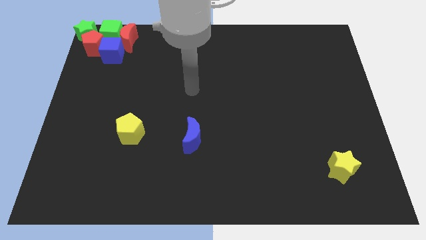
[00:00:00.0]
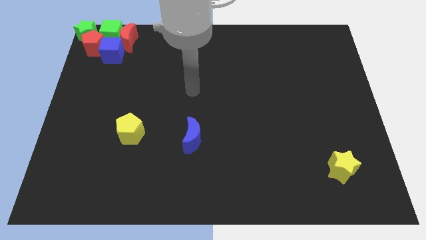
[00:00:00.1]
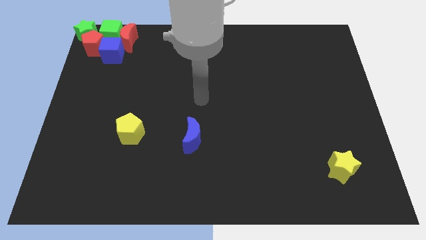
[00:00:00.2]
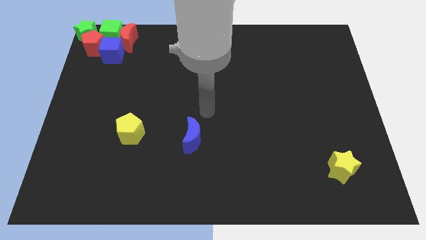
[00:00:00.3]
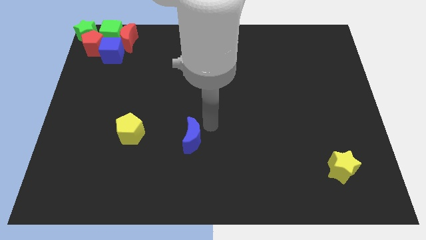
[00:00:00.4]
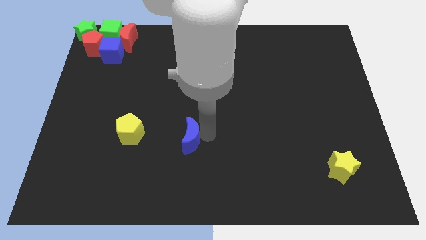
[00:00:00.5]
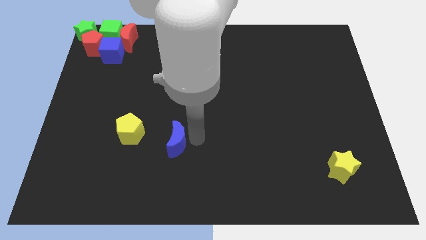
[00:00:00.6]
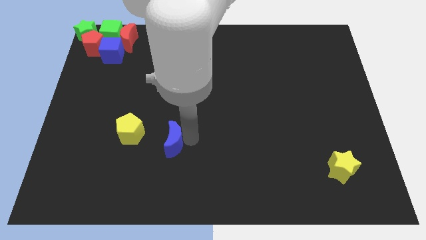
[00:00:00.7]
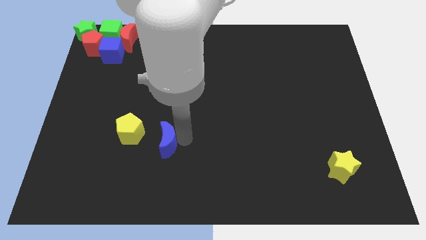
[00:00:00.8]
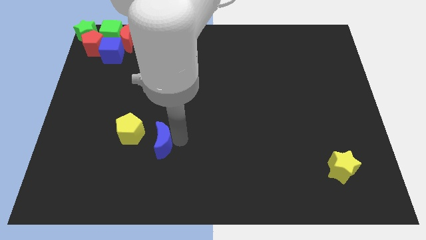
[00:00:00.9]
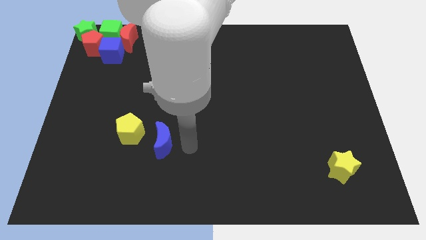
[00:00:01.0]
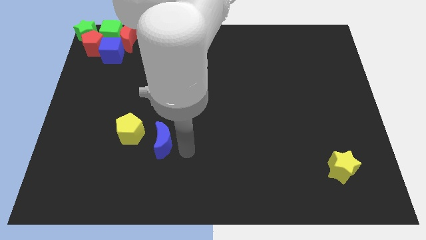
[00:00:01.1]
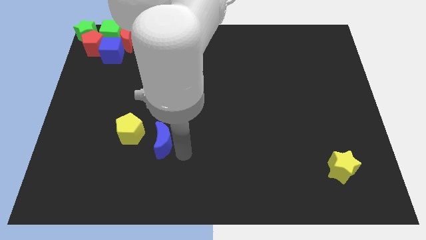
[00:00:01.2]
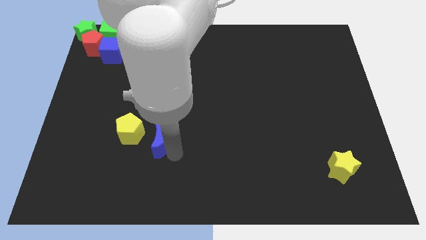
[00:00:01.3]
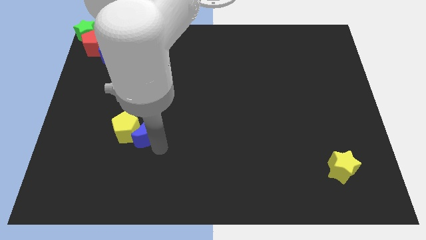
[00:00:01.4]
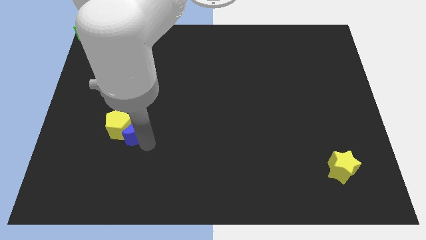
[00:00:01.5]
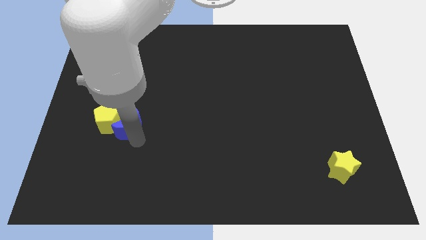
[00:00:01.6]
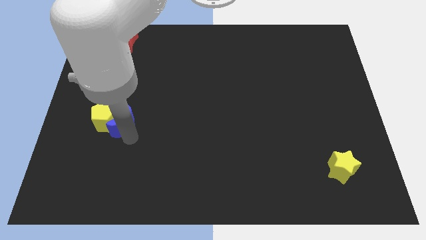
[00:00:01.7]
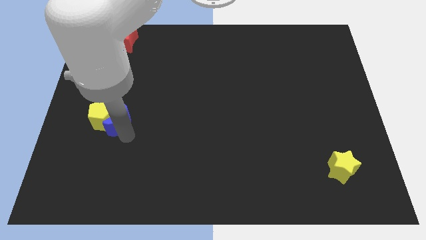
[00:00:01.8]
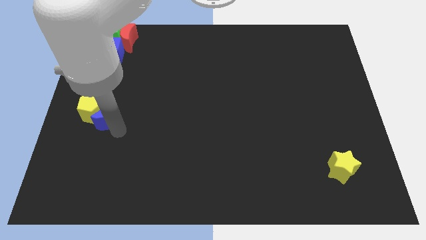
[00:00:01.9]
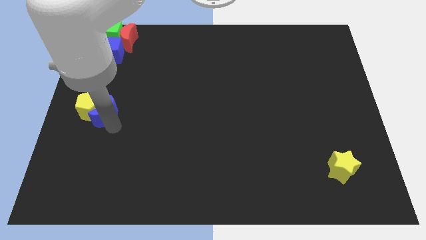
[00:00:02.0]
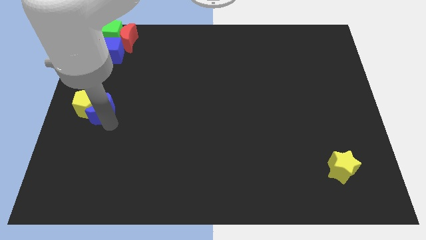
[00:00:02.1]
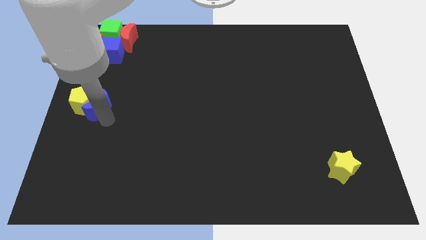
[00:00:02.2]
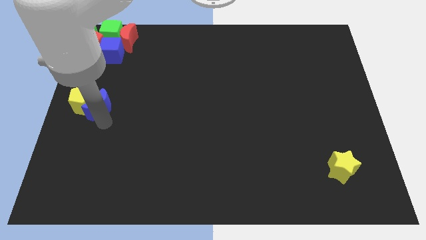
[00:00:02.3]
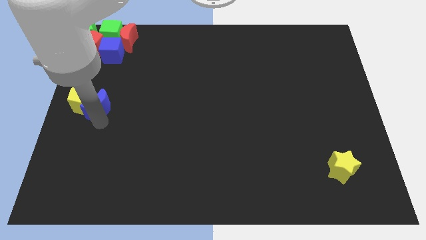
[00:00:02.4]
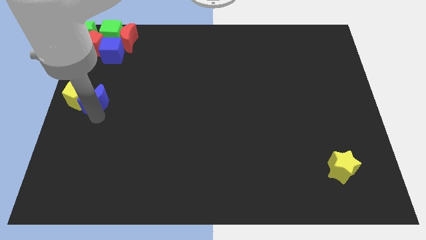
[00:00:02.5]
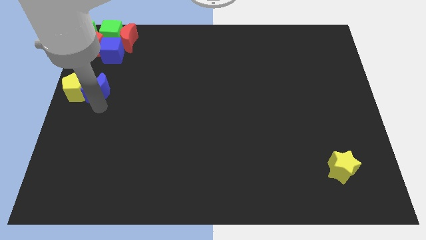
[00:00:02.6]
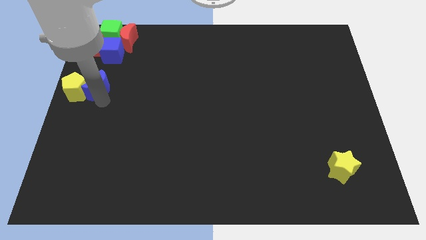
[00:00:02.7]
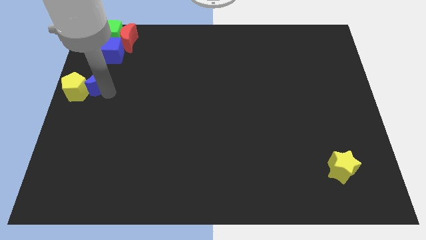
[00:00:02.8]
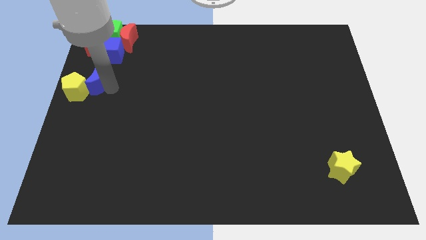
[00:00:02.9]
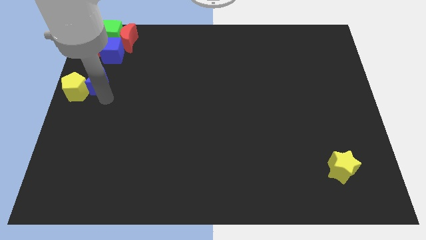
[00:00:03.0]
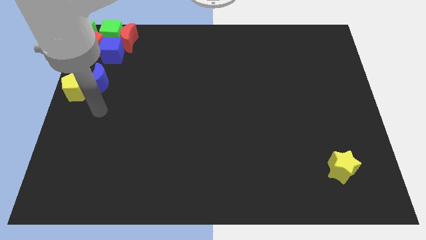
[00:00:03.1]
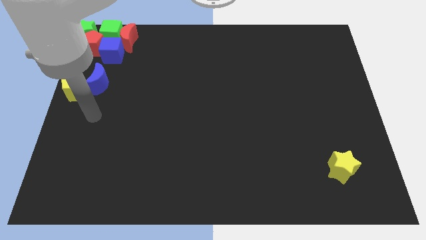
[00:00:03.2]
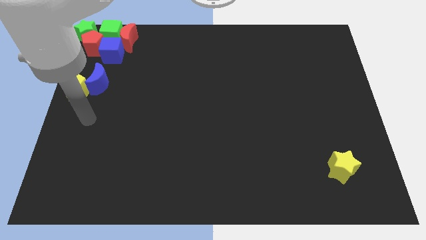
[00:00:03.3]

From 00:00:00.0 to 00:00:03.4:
drag the blue moon and yellow pentagon to the center left

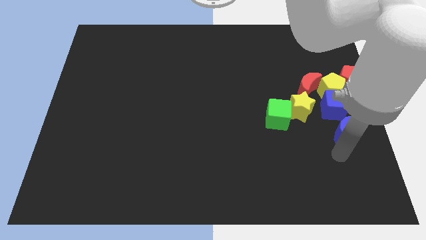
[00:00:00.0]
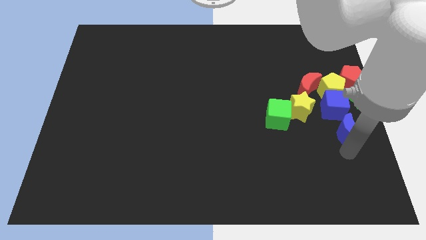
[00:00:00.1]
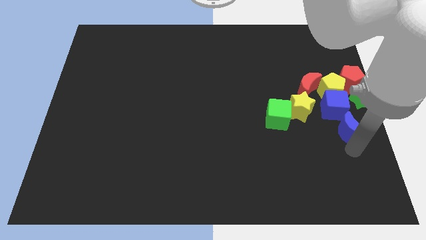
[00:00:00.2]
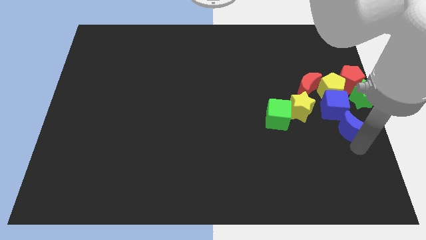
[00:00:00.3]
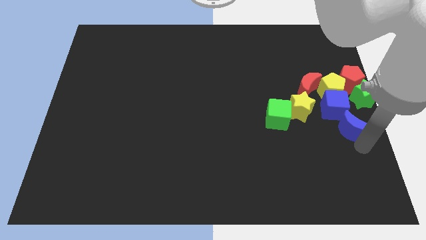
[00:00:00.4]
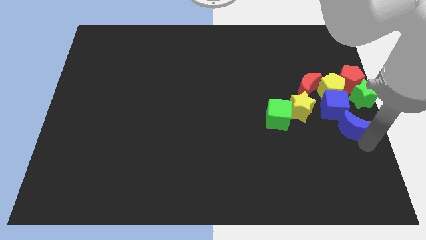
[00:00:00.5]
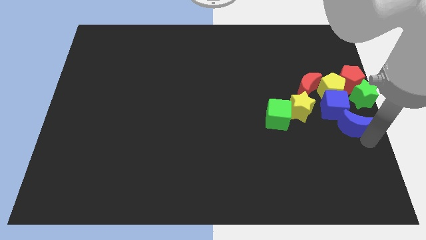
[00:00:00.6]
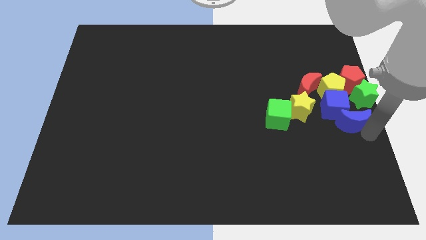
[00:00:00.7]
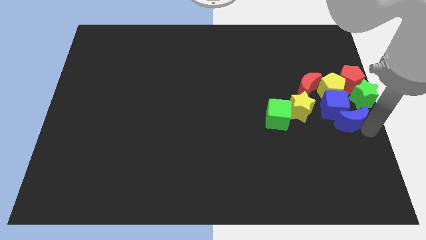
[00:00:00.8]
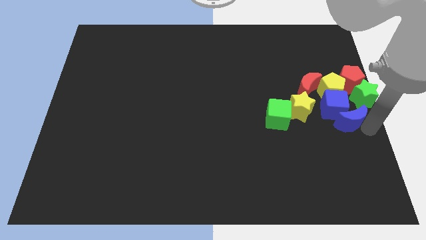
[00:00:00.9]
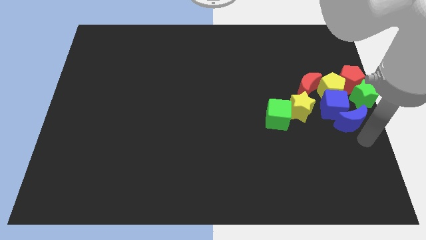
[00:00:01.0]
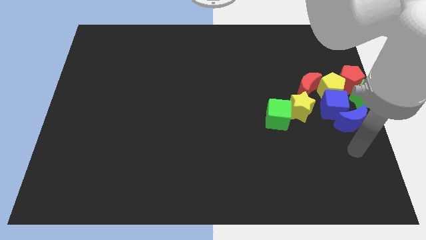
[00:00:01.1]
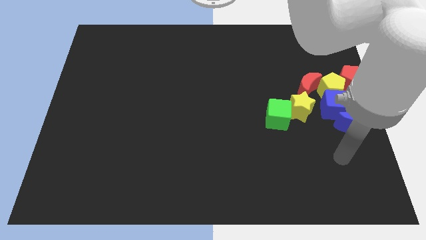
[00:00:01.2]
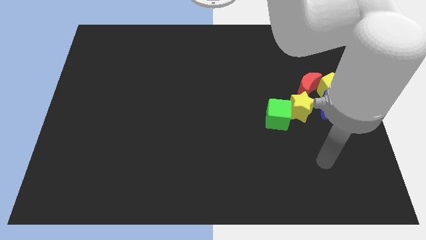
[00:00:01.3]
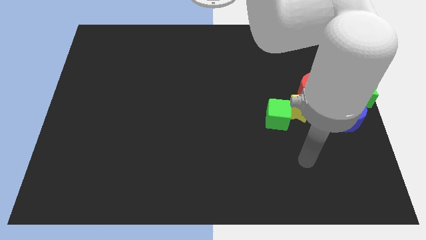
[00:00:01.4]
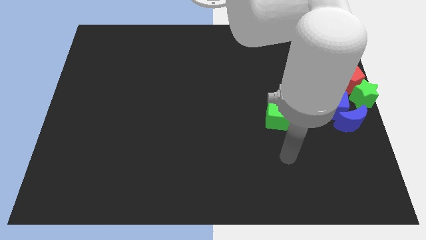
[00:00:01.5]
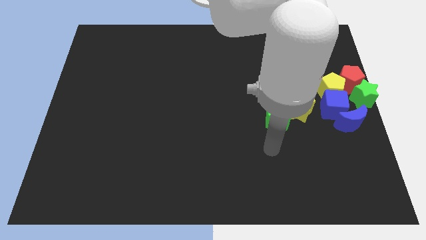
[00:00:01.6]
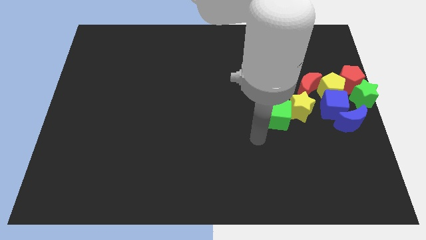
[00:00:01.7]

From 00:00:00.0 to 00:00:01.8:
adjust the blue moon into the blue cube

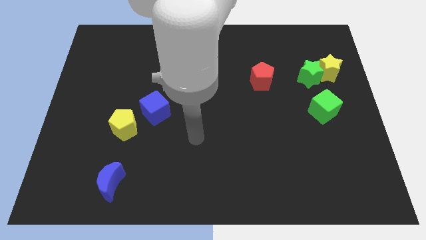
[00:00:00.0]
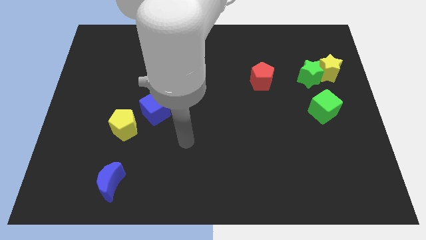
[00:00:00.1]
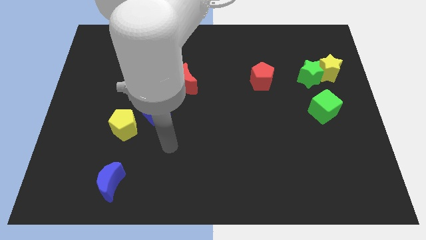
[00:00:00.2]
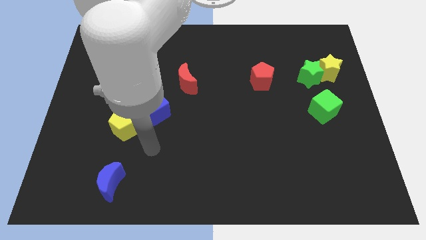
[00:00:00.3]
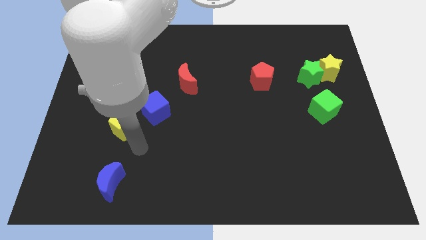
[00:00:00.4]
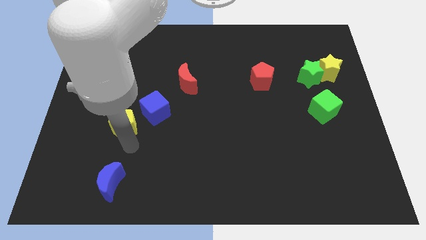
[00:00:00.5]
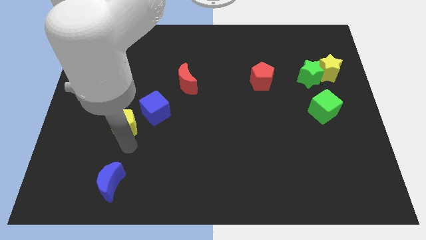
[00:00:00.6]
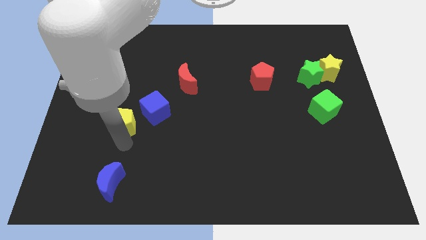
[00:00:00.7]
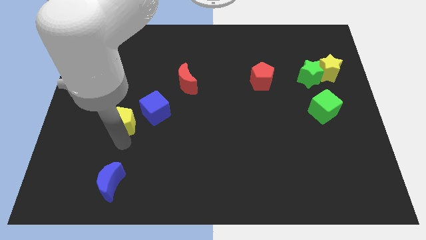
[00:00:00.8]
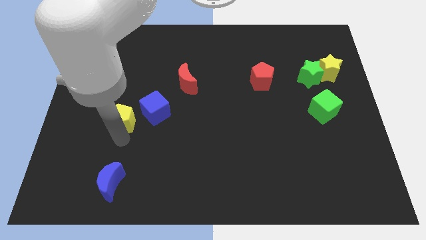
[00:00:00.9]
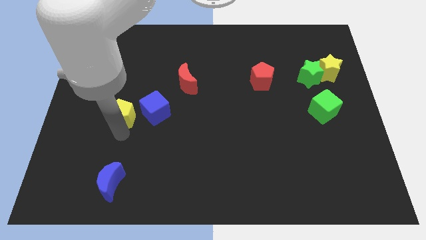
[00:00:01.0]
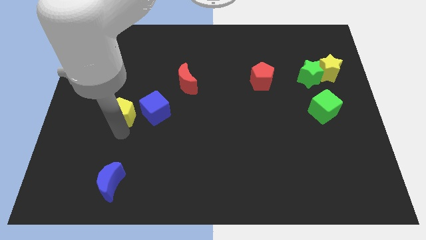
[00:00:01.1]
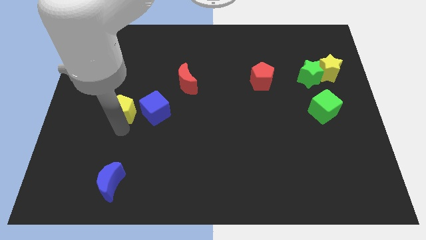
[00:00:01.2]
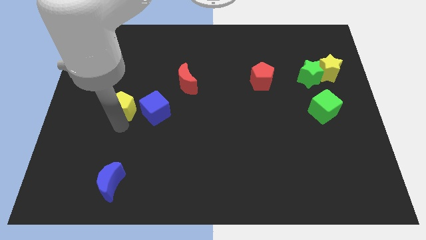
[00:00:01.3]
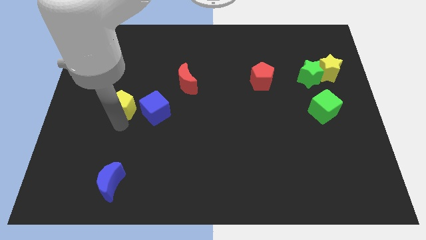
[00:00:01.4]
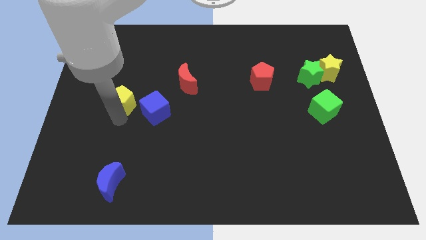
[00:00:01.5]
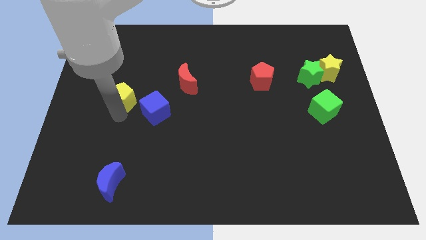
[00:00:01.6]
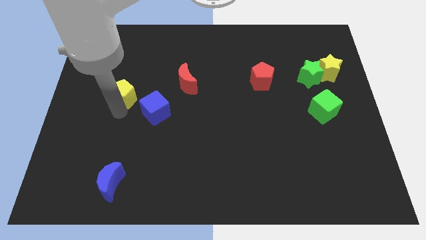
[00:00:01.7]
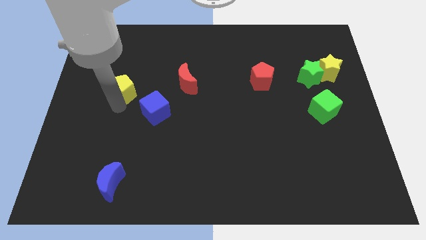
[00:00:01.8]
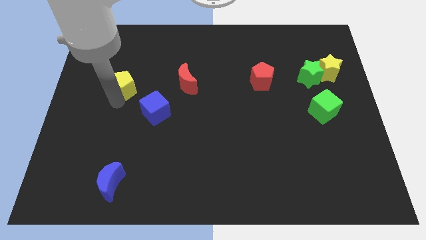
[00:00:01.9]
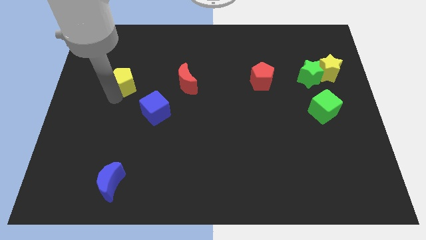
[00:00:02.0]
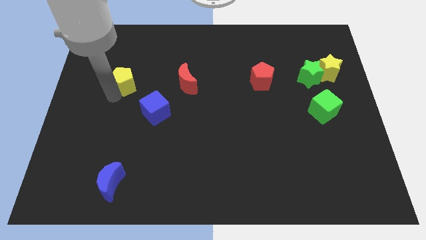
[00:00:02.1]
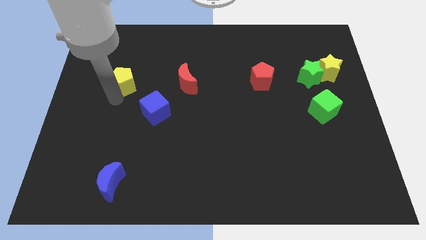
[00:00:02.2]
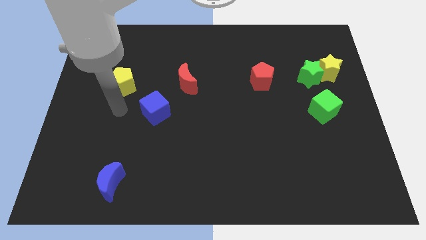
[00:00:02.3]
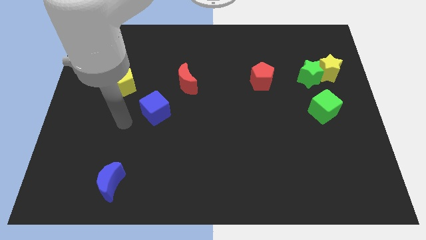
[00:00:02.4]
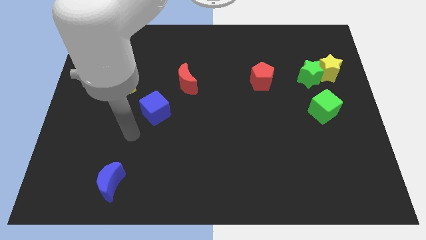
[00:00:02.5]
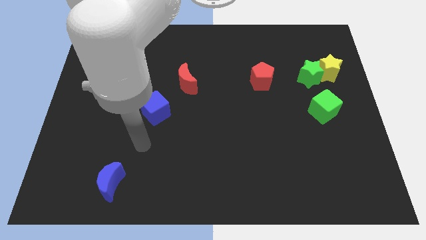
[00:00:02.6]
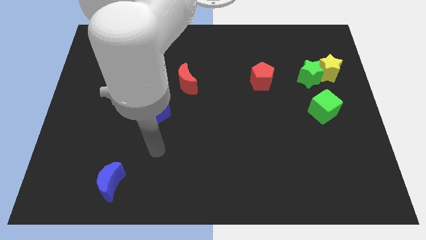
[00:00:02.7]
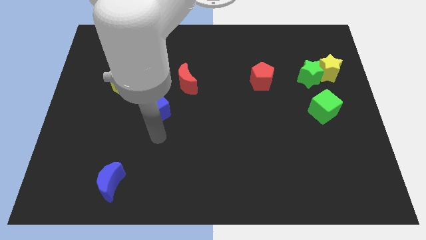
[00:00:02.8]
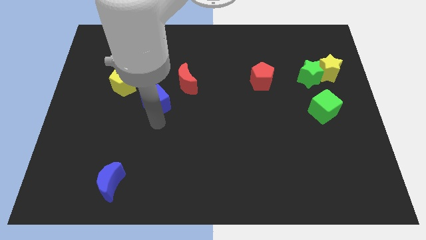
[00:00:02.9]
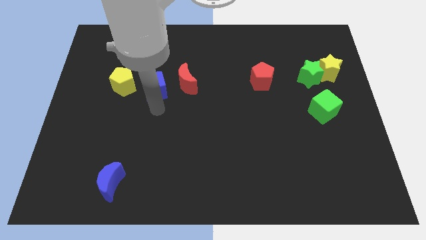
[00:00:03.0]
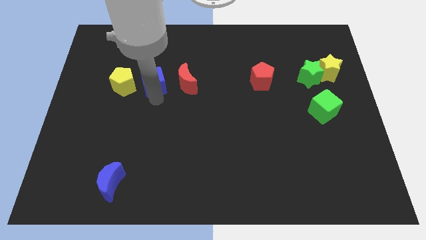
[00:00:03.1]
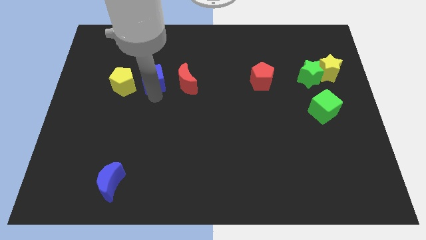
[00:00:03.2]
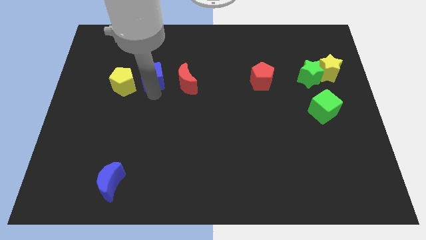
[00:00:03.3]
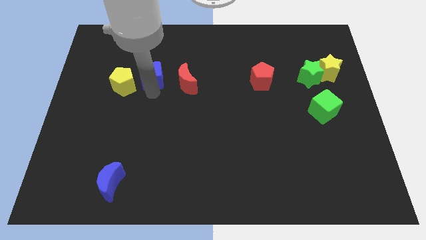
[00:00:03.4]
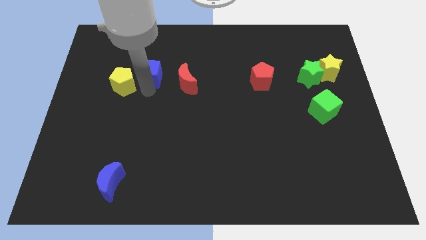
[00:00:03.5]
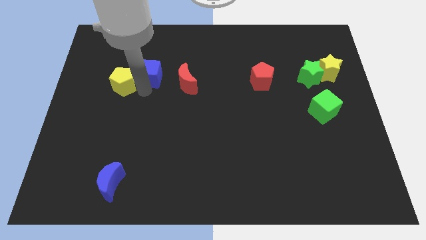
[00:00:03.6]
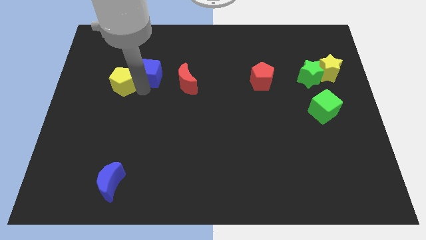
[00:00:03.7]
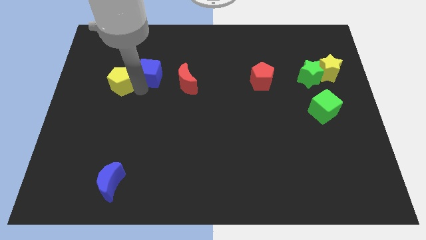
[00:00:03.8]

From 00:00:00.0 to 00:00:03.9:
place blue cube in between yellow pentagon and red crescent
